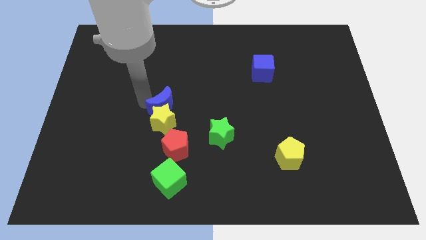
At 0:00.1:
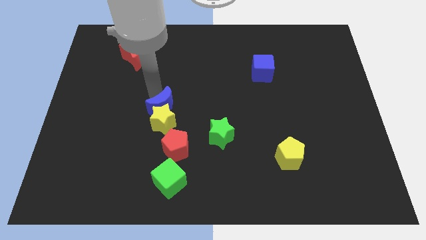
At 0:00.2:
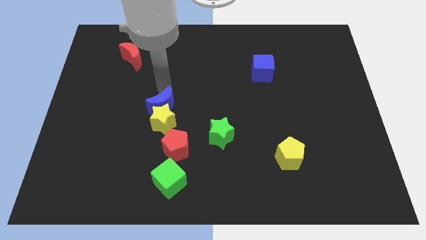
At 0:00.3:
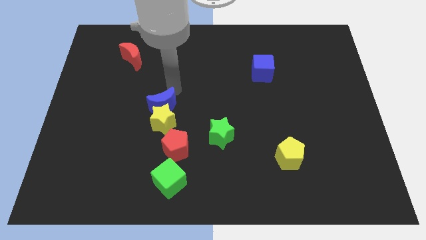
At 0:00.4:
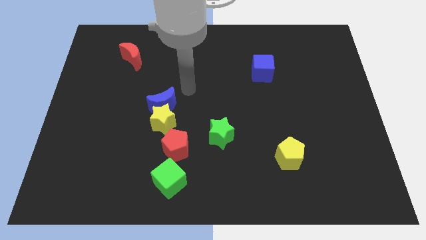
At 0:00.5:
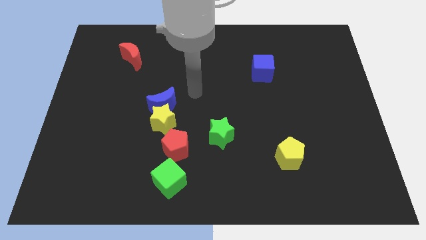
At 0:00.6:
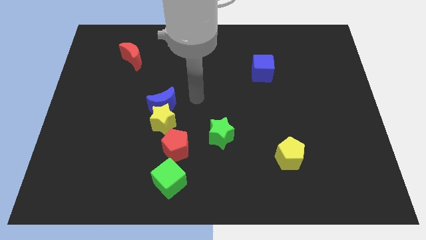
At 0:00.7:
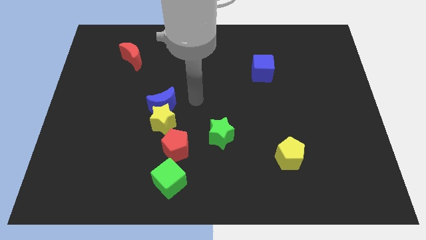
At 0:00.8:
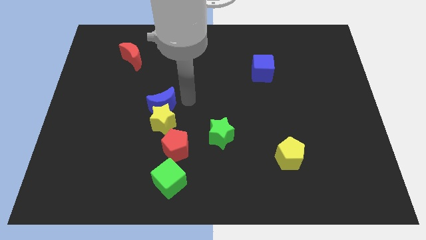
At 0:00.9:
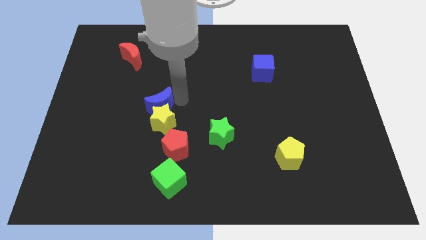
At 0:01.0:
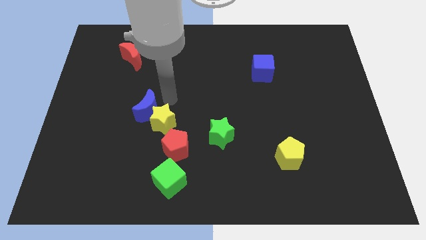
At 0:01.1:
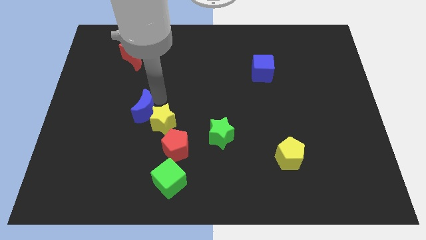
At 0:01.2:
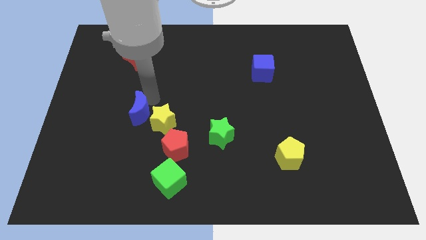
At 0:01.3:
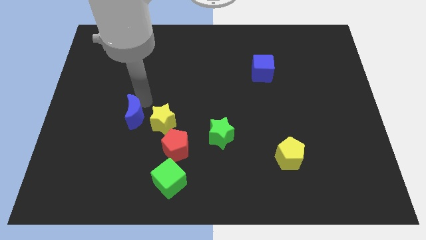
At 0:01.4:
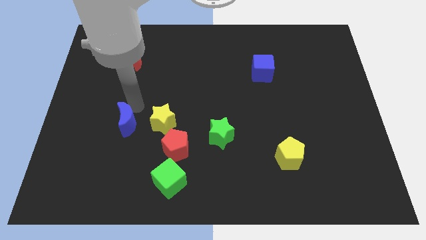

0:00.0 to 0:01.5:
move blue moon away from the yellow star

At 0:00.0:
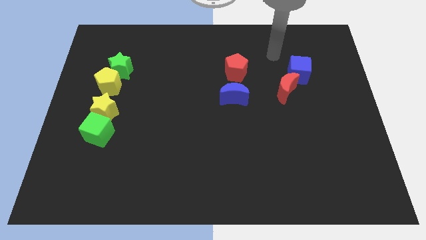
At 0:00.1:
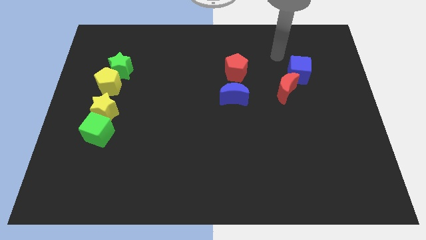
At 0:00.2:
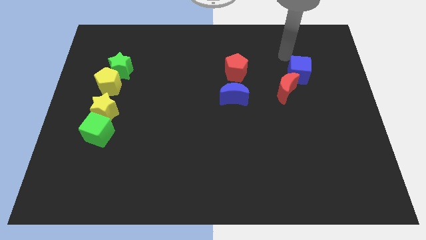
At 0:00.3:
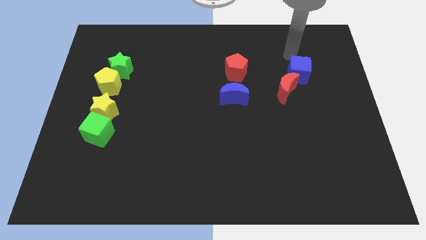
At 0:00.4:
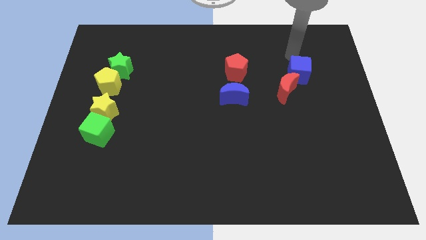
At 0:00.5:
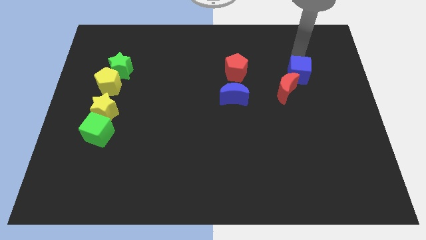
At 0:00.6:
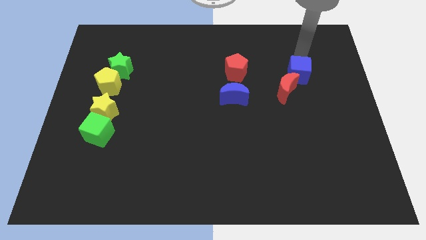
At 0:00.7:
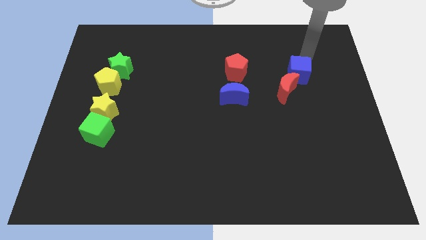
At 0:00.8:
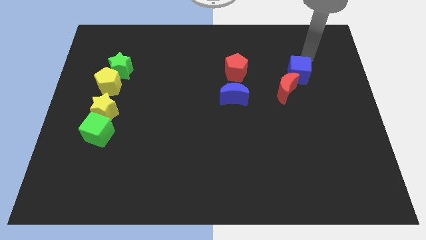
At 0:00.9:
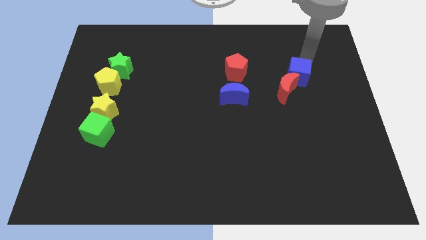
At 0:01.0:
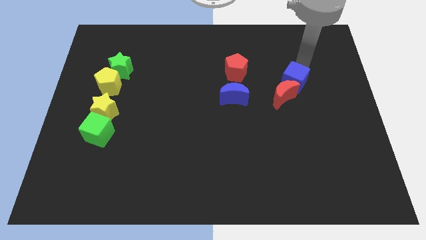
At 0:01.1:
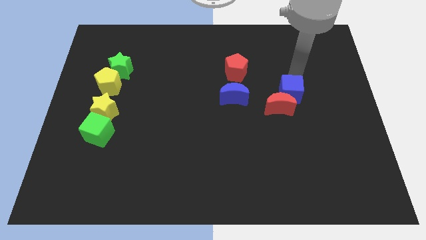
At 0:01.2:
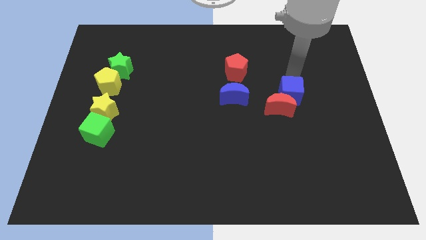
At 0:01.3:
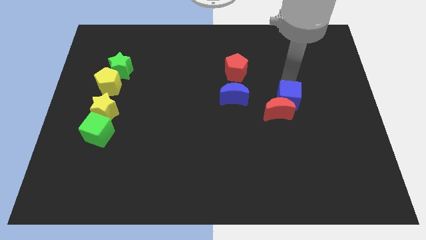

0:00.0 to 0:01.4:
push blue cube in to red moon

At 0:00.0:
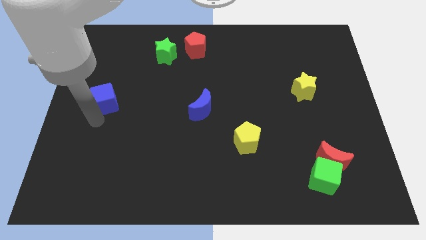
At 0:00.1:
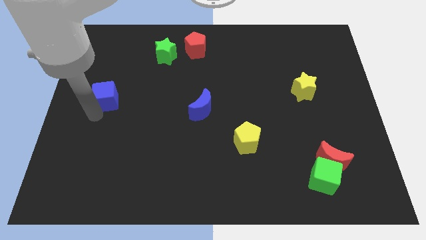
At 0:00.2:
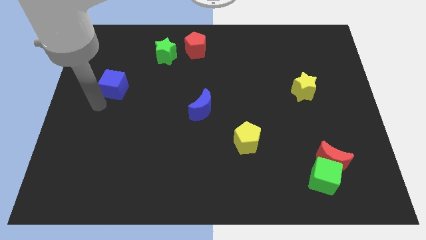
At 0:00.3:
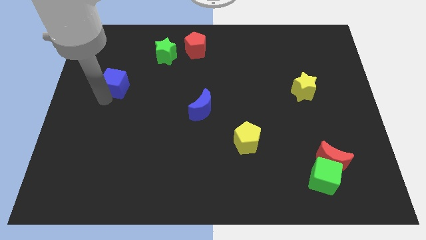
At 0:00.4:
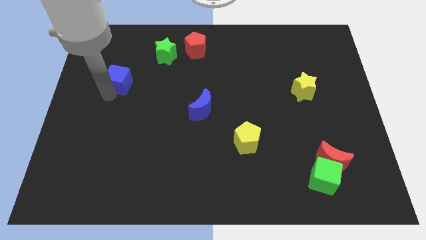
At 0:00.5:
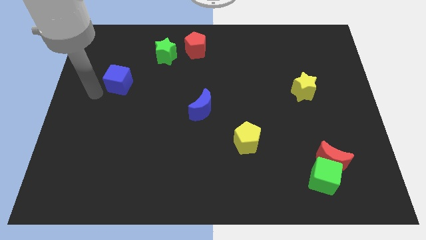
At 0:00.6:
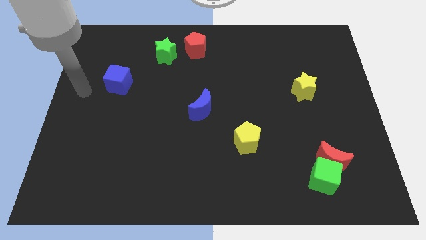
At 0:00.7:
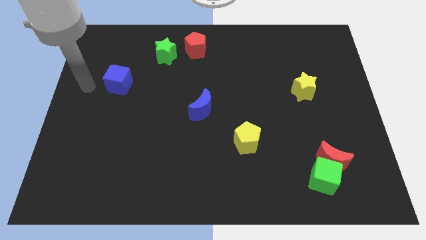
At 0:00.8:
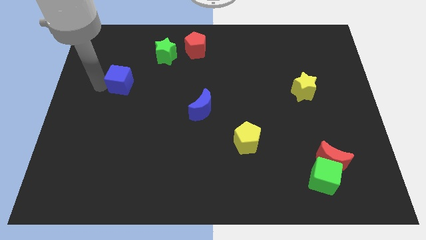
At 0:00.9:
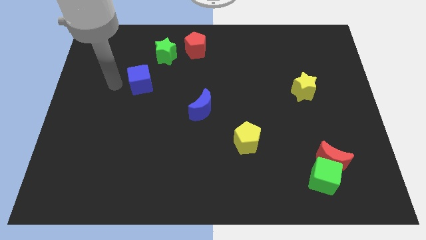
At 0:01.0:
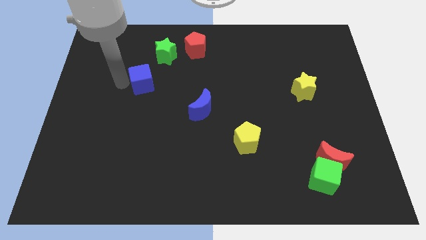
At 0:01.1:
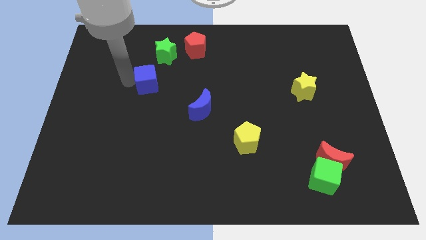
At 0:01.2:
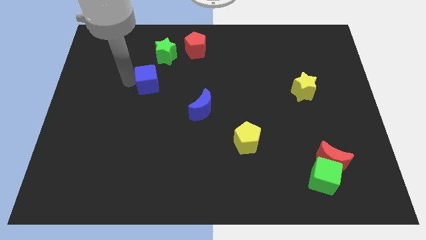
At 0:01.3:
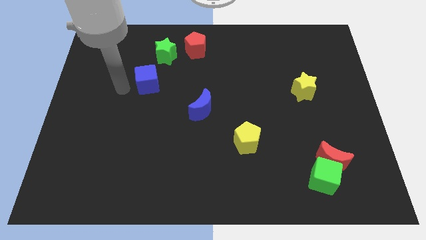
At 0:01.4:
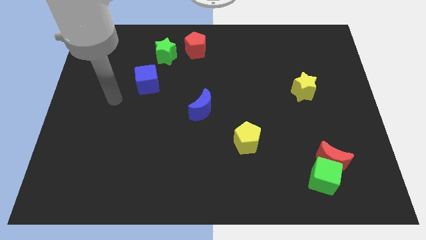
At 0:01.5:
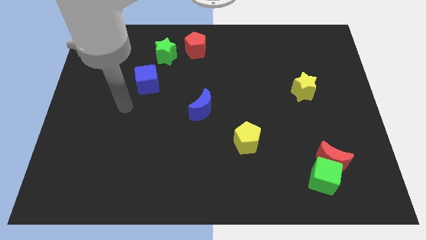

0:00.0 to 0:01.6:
slightly move the blue cube towards green star

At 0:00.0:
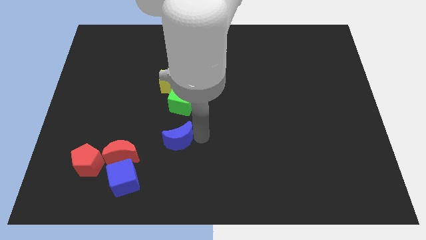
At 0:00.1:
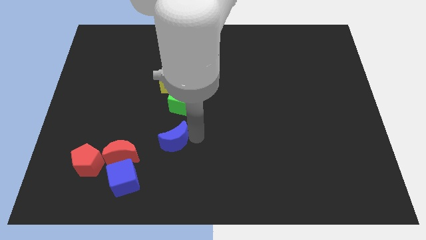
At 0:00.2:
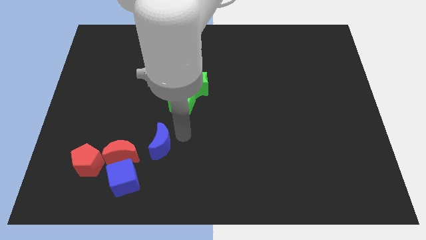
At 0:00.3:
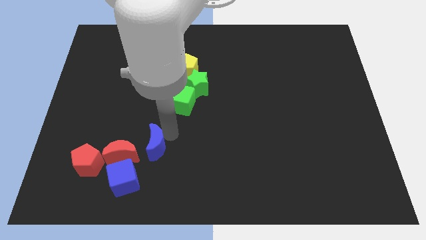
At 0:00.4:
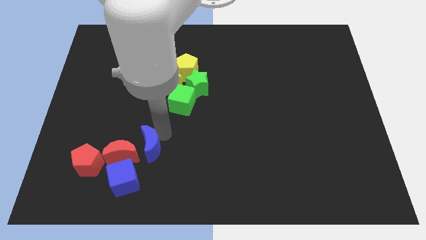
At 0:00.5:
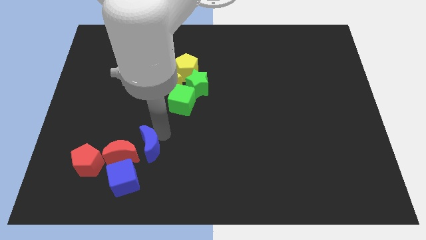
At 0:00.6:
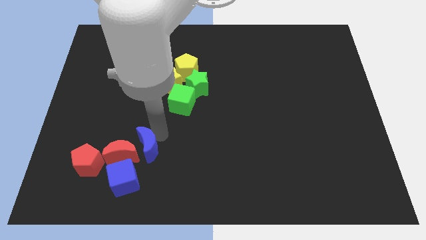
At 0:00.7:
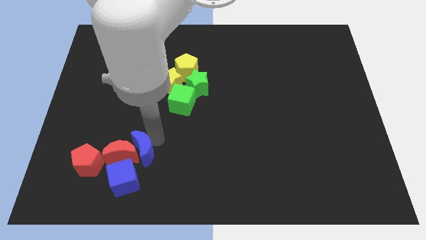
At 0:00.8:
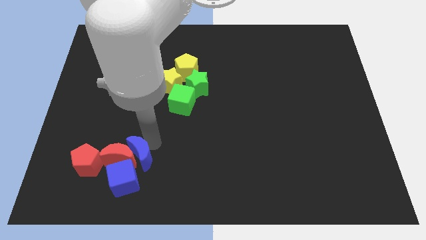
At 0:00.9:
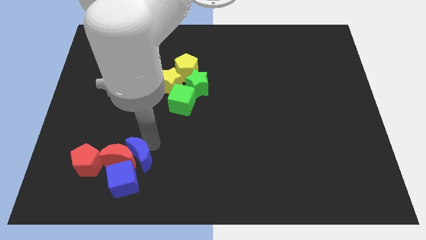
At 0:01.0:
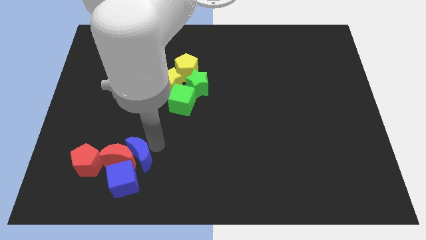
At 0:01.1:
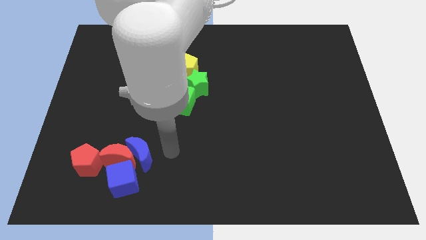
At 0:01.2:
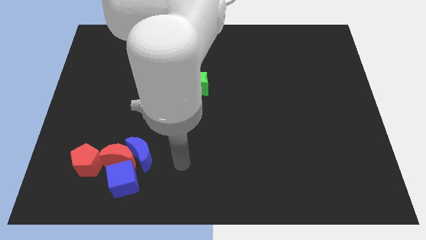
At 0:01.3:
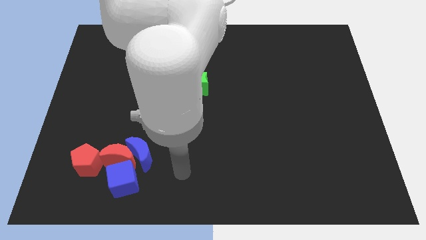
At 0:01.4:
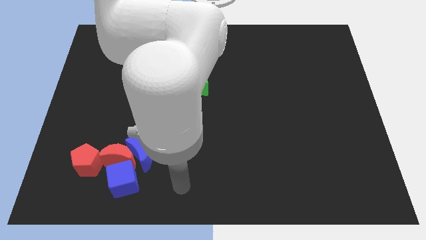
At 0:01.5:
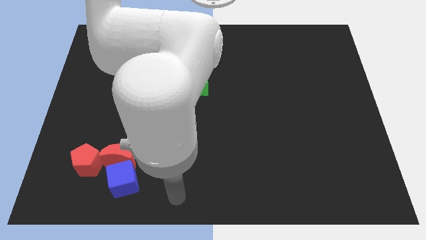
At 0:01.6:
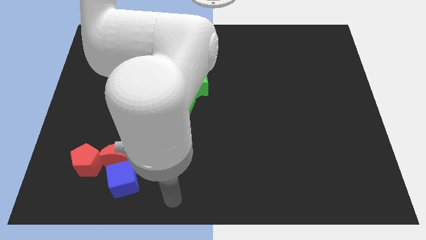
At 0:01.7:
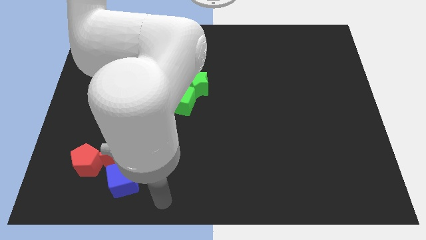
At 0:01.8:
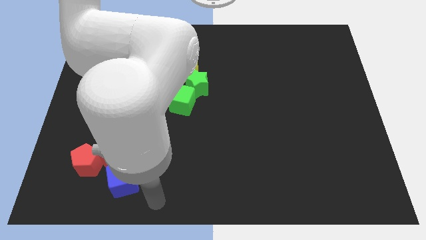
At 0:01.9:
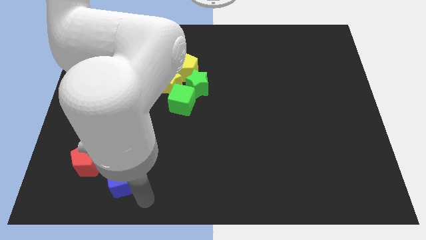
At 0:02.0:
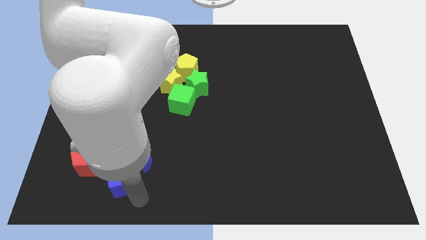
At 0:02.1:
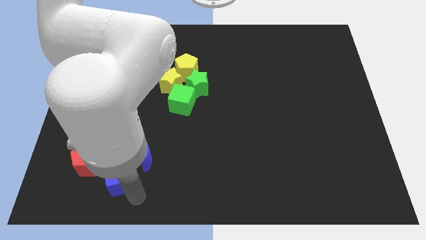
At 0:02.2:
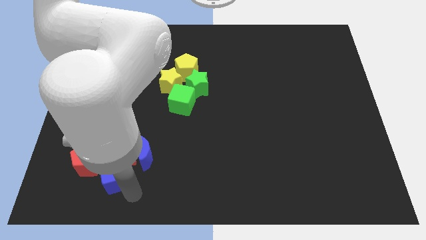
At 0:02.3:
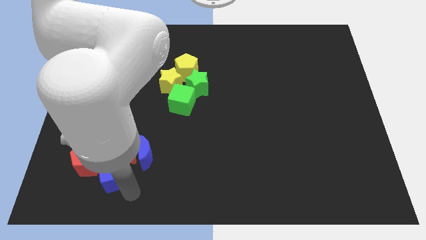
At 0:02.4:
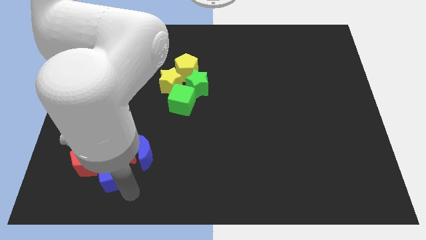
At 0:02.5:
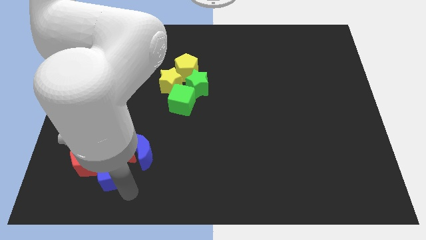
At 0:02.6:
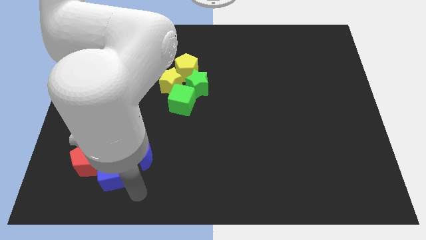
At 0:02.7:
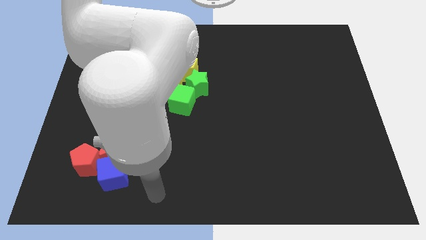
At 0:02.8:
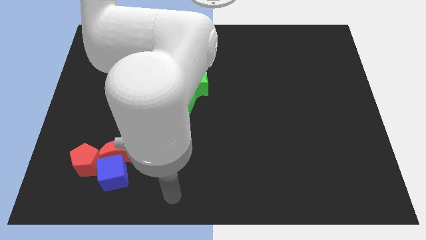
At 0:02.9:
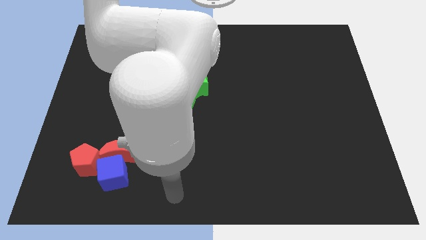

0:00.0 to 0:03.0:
push the blue cube into the red blocks

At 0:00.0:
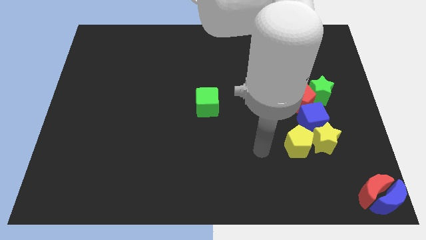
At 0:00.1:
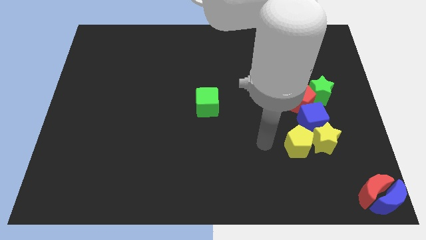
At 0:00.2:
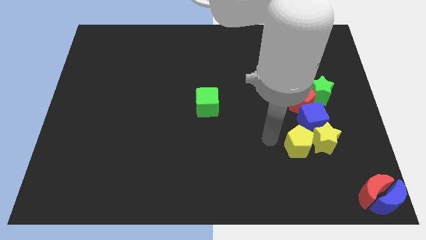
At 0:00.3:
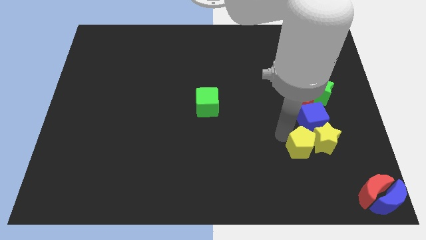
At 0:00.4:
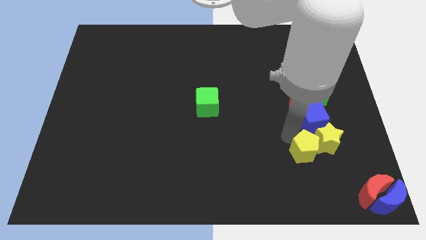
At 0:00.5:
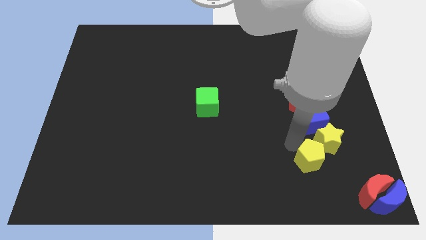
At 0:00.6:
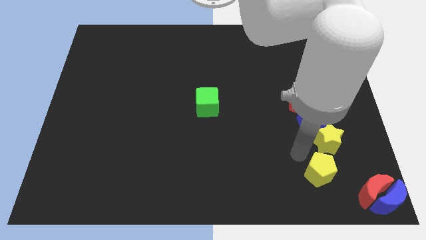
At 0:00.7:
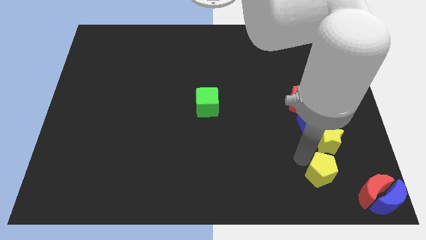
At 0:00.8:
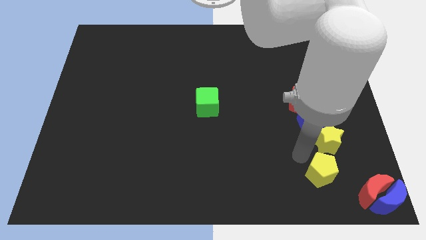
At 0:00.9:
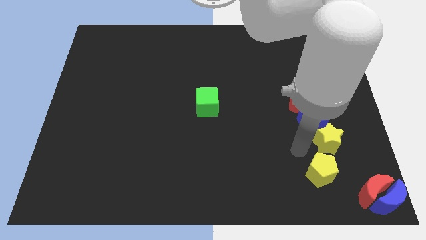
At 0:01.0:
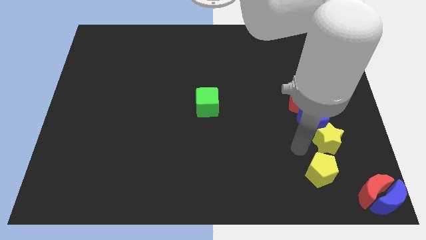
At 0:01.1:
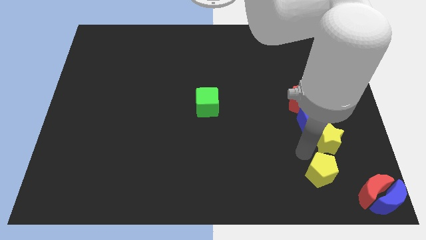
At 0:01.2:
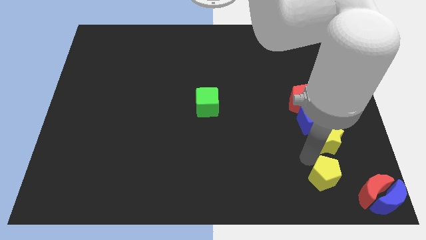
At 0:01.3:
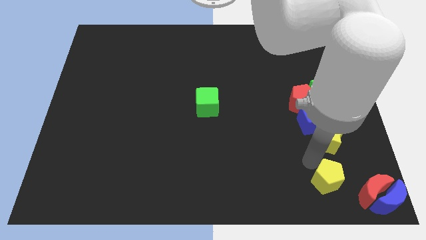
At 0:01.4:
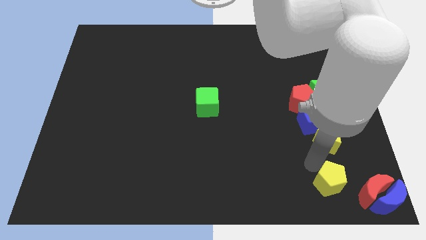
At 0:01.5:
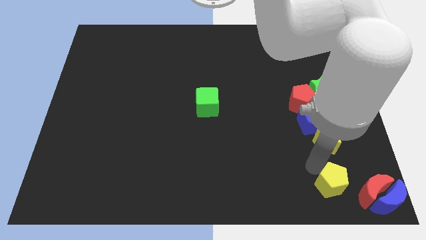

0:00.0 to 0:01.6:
separate the yellow pentagon from the yellow star
